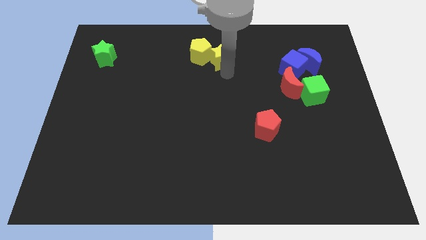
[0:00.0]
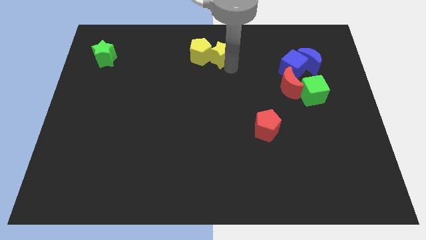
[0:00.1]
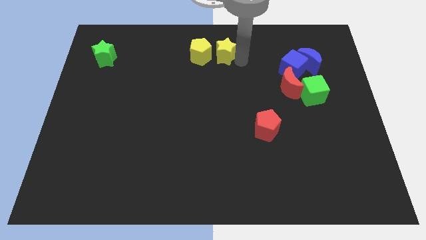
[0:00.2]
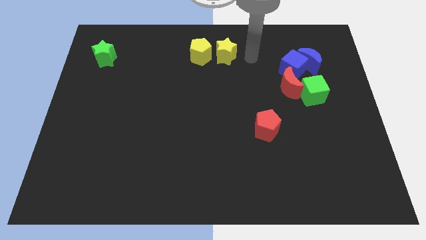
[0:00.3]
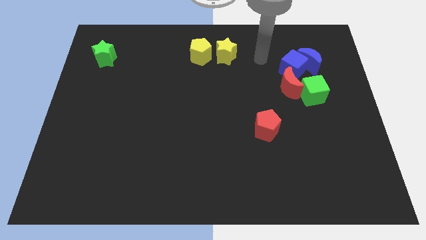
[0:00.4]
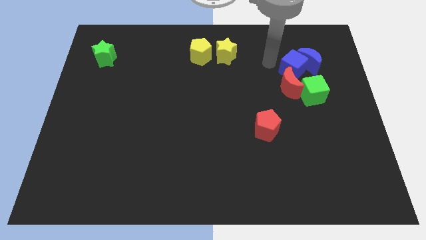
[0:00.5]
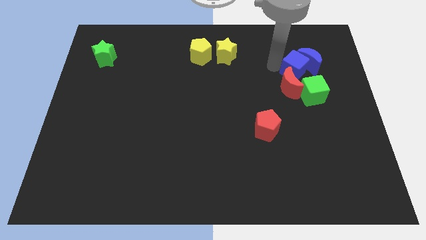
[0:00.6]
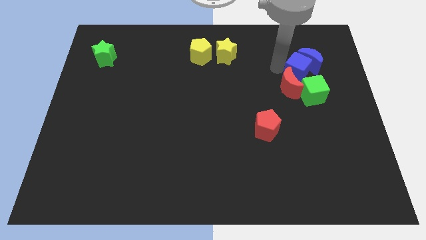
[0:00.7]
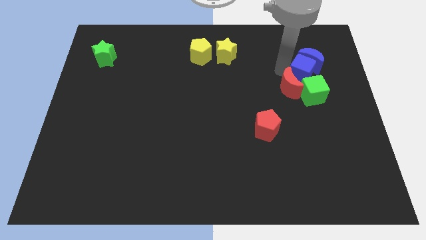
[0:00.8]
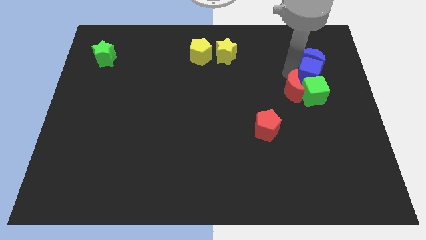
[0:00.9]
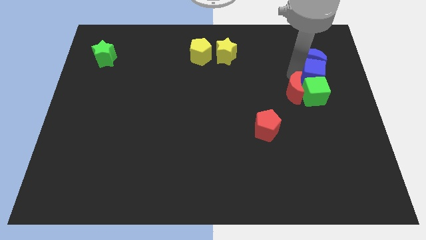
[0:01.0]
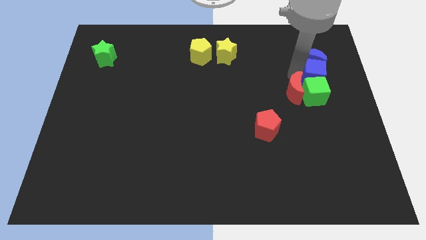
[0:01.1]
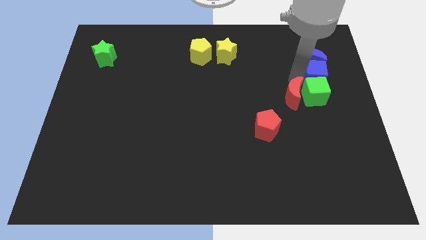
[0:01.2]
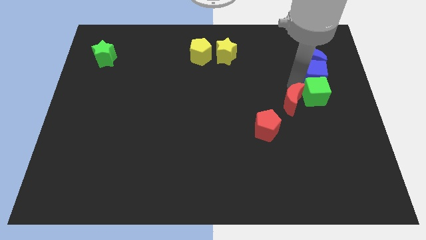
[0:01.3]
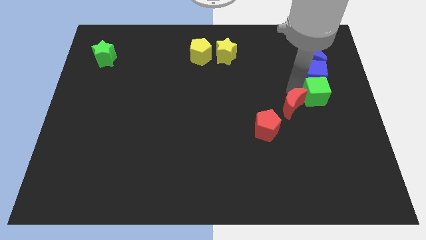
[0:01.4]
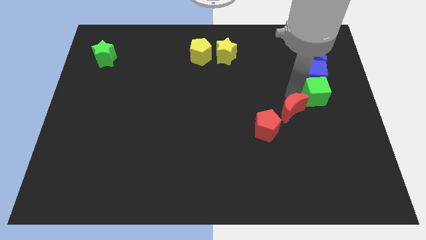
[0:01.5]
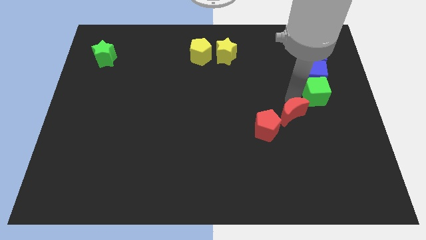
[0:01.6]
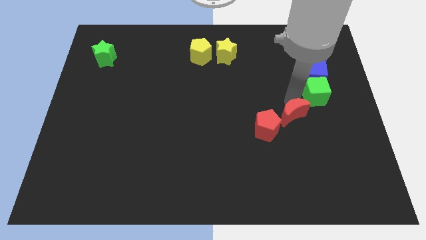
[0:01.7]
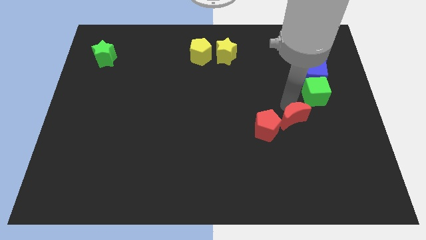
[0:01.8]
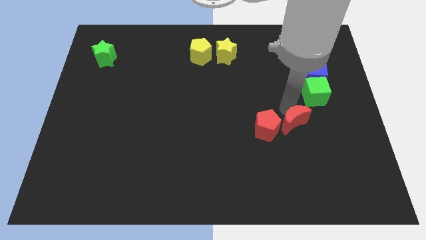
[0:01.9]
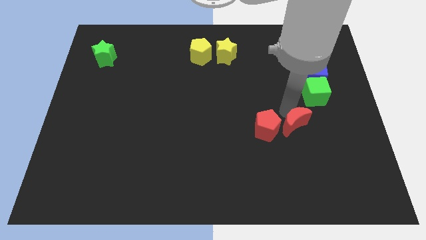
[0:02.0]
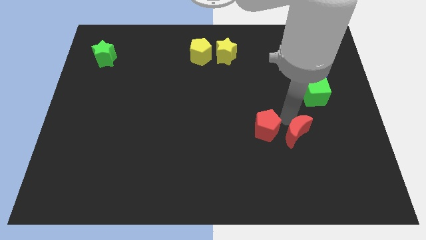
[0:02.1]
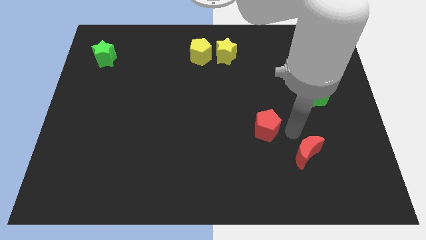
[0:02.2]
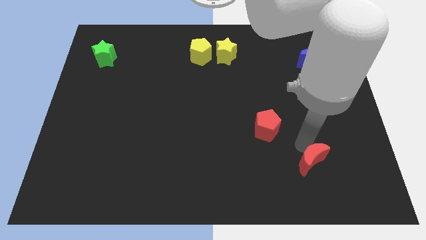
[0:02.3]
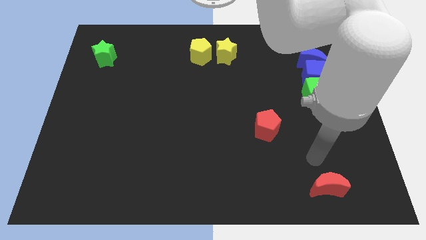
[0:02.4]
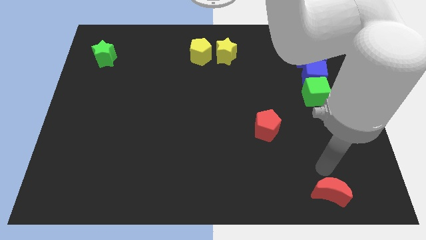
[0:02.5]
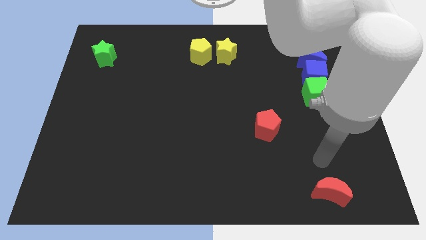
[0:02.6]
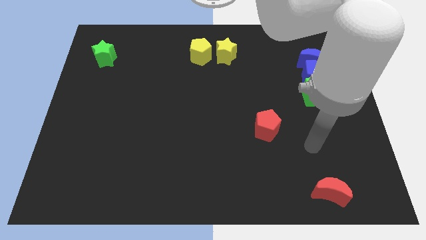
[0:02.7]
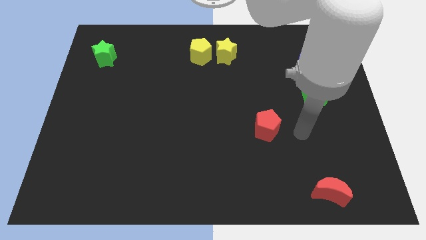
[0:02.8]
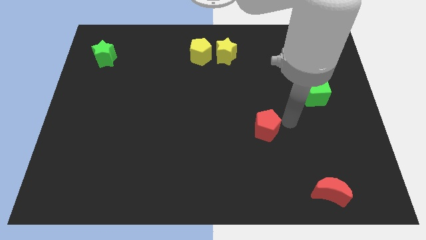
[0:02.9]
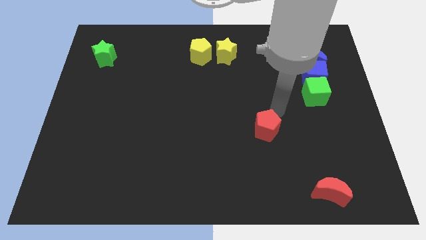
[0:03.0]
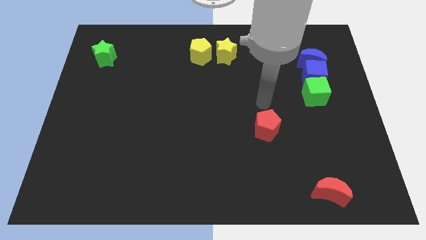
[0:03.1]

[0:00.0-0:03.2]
move the red crescent to the bottom right of the board

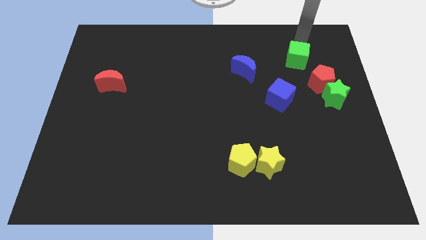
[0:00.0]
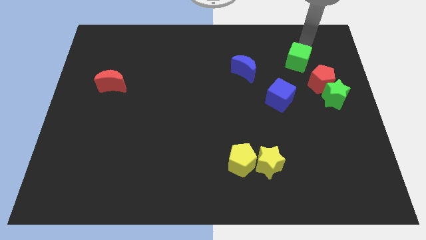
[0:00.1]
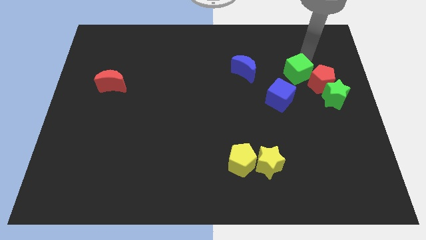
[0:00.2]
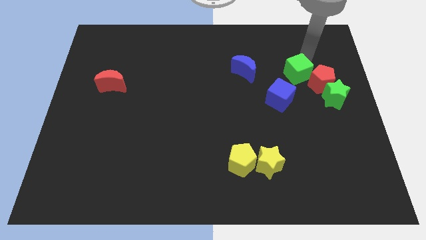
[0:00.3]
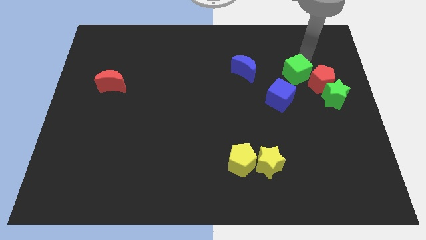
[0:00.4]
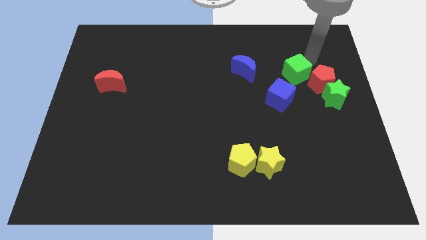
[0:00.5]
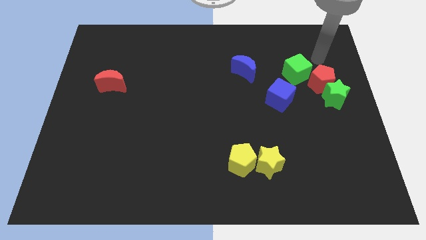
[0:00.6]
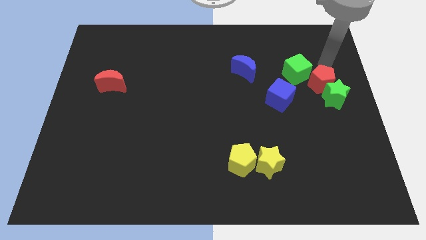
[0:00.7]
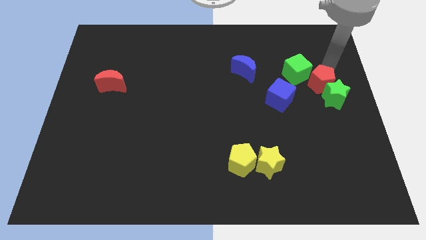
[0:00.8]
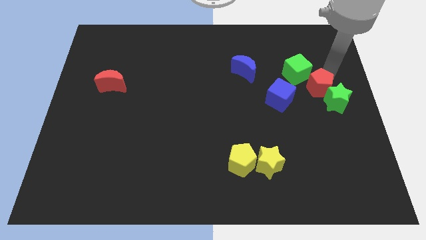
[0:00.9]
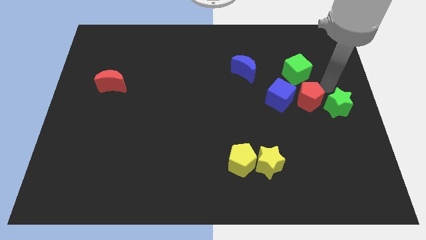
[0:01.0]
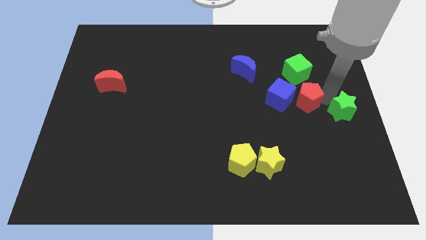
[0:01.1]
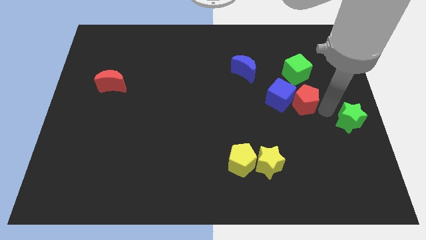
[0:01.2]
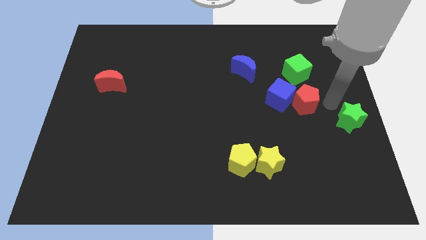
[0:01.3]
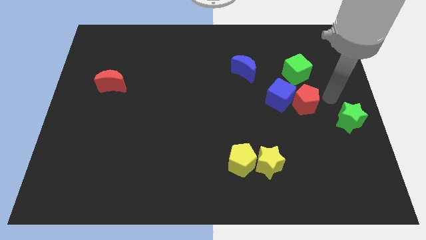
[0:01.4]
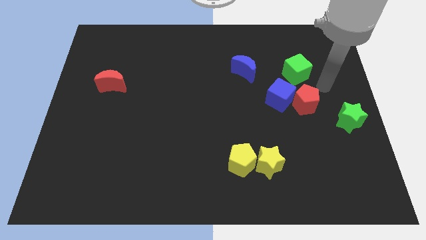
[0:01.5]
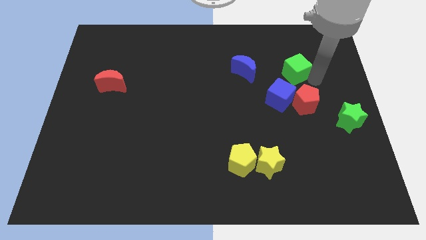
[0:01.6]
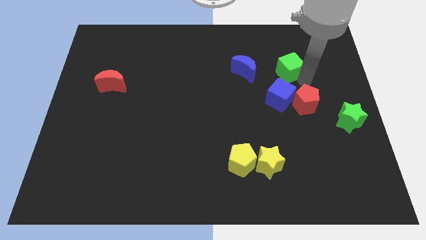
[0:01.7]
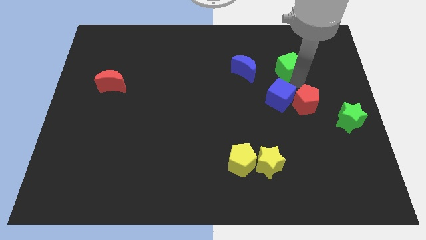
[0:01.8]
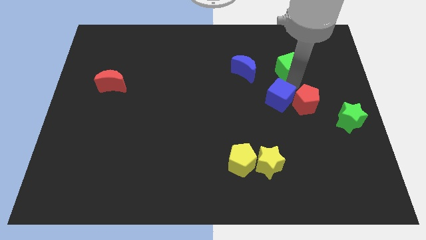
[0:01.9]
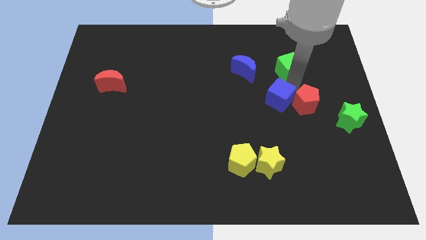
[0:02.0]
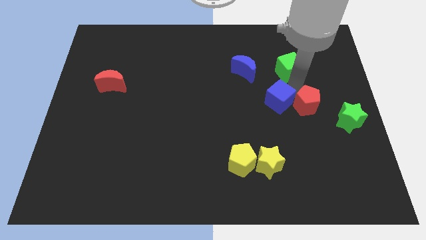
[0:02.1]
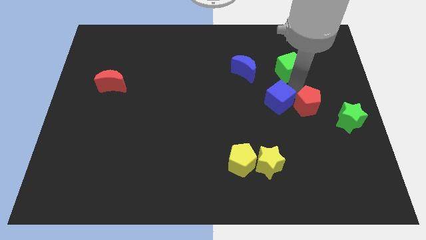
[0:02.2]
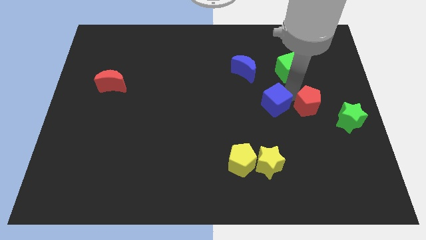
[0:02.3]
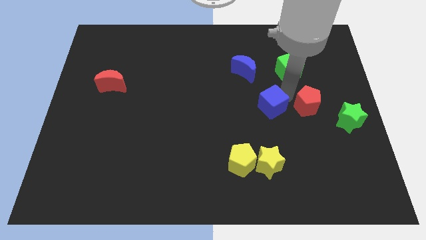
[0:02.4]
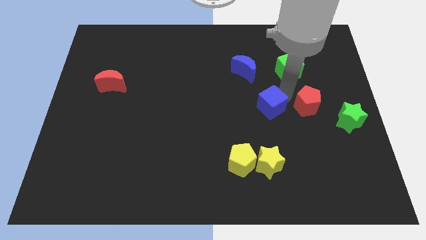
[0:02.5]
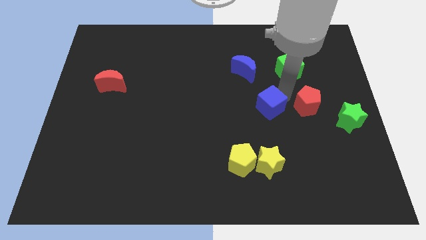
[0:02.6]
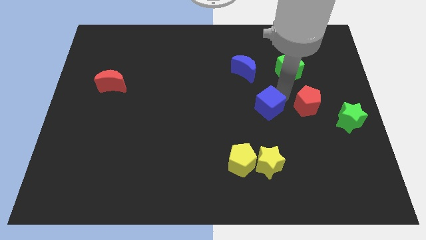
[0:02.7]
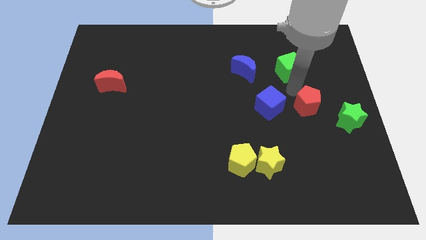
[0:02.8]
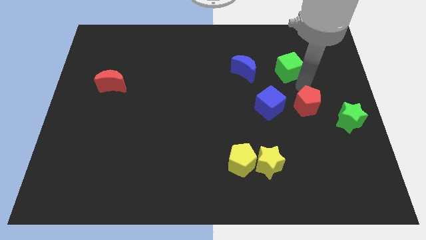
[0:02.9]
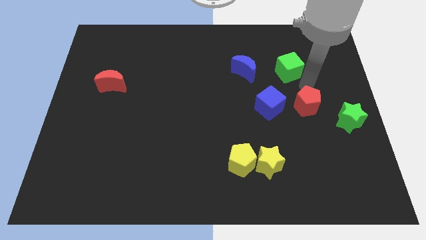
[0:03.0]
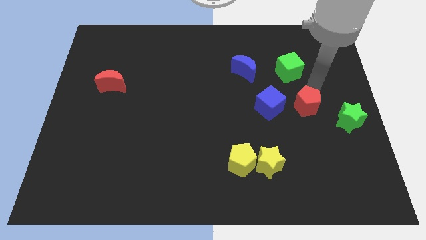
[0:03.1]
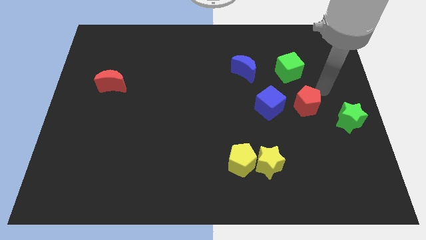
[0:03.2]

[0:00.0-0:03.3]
separate the red pentagon from the green star

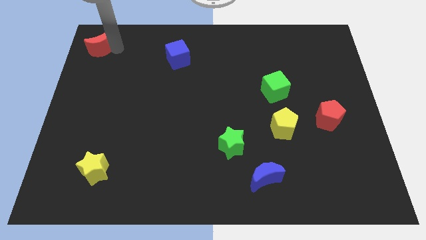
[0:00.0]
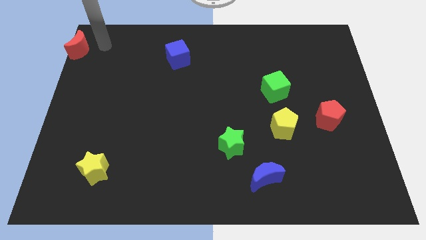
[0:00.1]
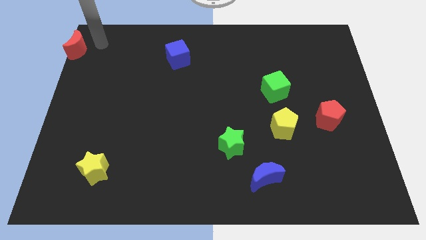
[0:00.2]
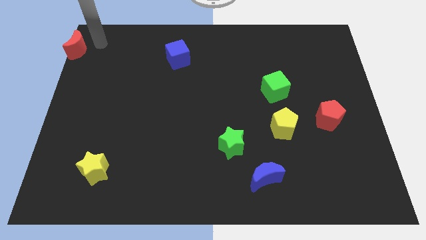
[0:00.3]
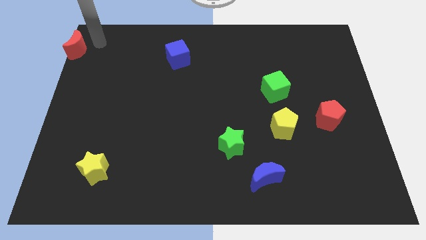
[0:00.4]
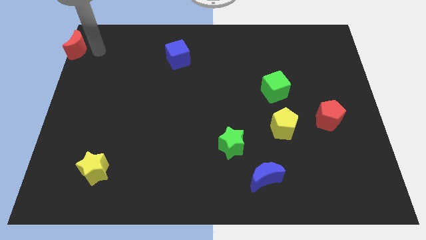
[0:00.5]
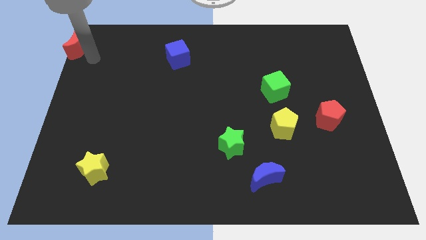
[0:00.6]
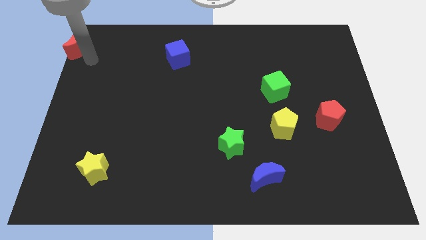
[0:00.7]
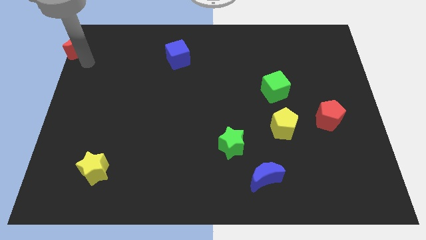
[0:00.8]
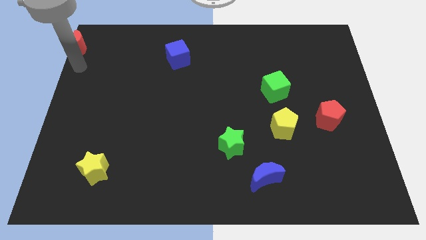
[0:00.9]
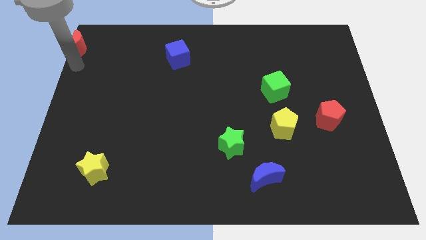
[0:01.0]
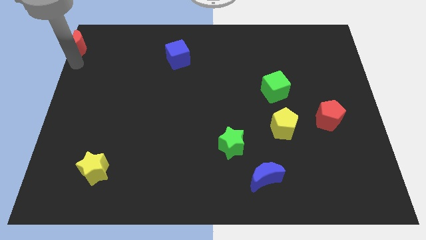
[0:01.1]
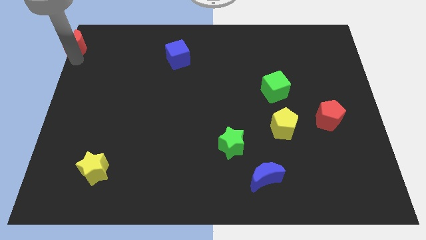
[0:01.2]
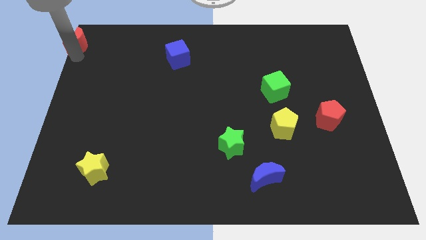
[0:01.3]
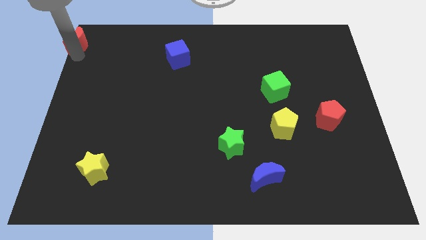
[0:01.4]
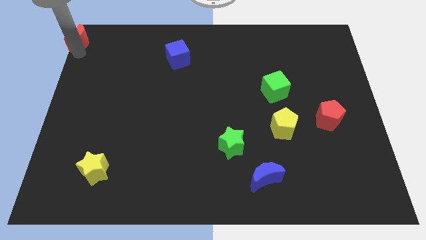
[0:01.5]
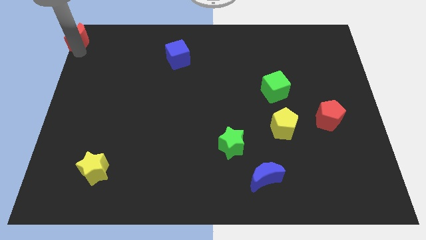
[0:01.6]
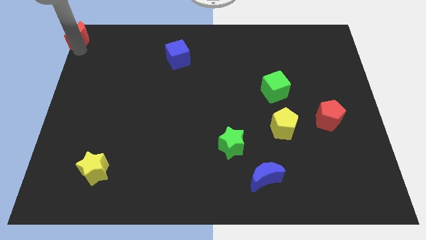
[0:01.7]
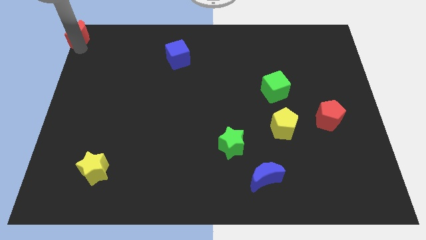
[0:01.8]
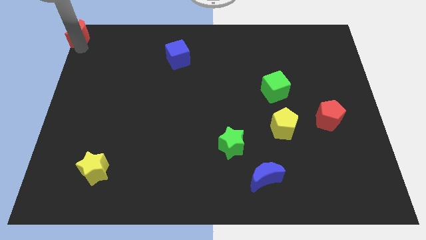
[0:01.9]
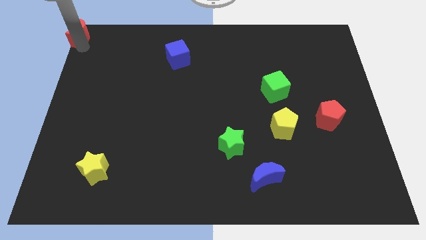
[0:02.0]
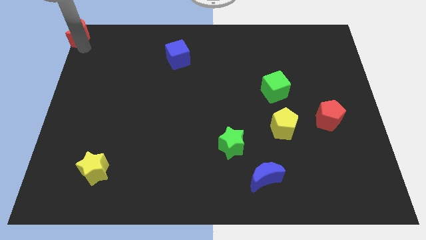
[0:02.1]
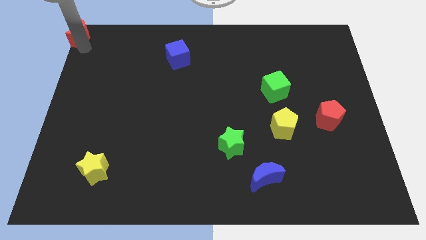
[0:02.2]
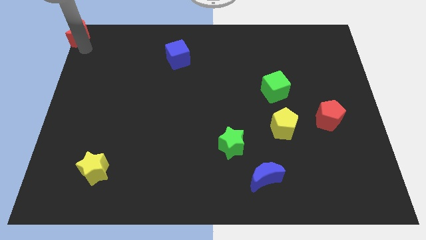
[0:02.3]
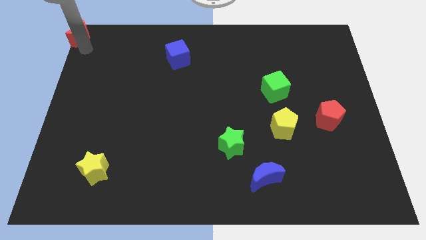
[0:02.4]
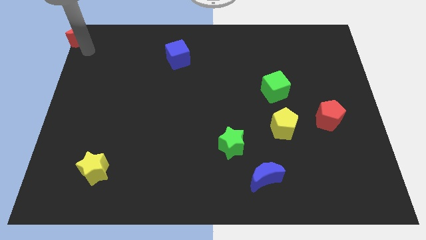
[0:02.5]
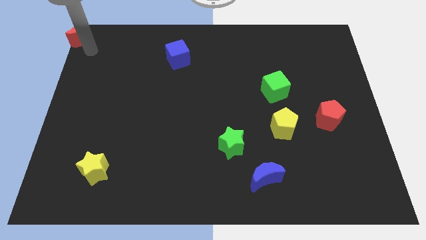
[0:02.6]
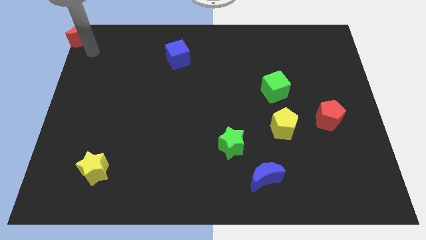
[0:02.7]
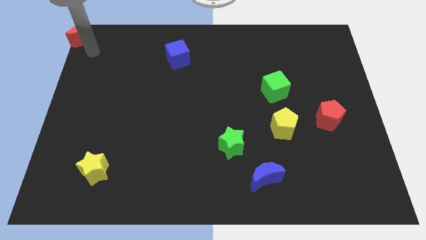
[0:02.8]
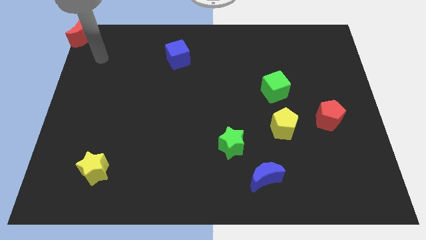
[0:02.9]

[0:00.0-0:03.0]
push the red crescent to the top left corner of the board
